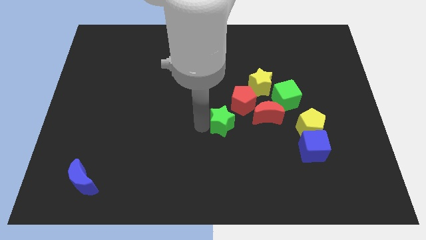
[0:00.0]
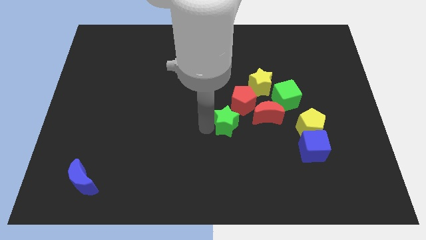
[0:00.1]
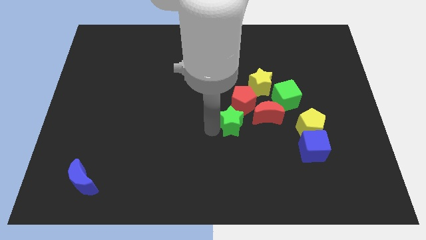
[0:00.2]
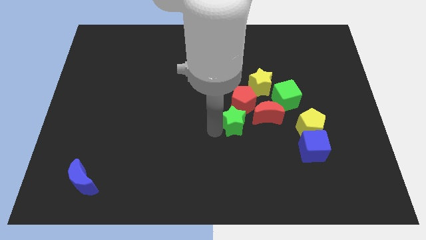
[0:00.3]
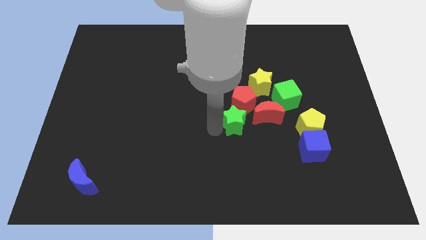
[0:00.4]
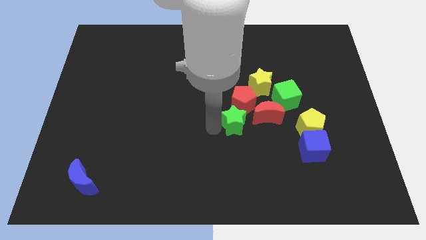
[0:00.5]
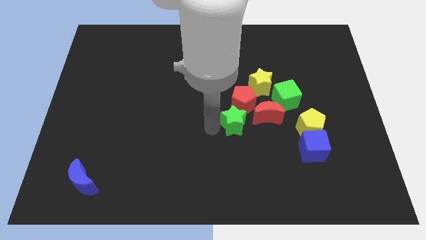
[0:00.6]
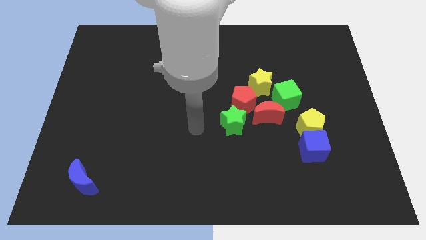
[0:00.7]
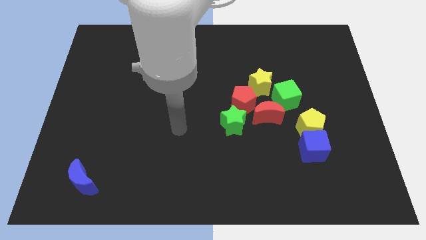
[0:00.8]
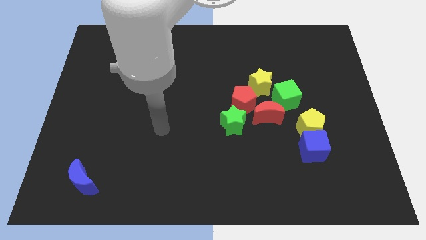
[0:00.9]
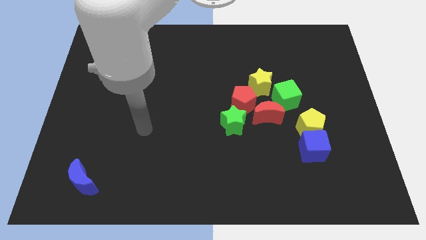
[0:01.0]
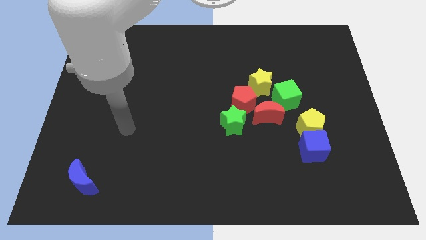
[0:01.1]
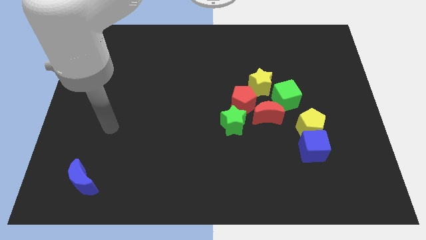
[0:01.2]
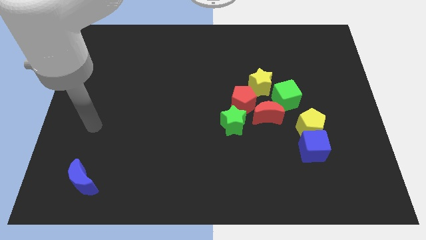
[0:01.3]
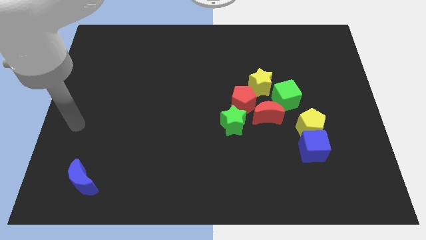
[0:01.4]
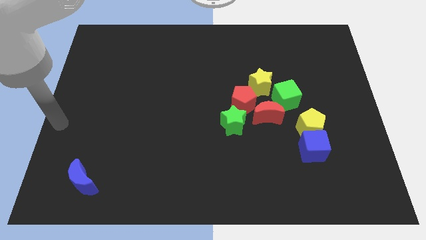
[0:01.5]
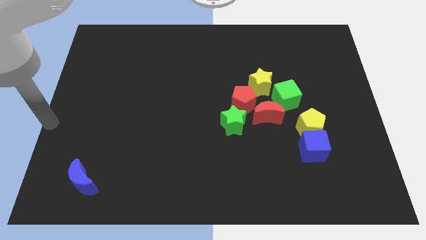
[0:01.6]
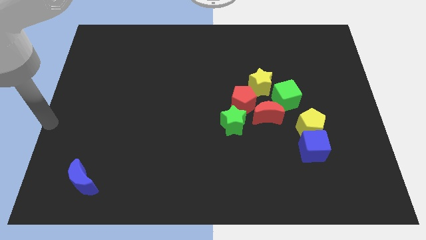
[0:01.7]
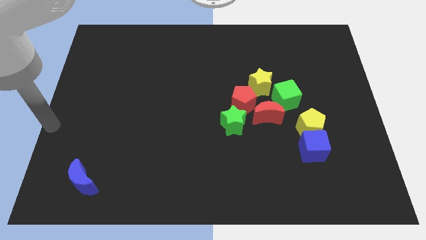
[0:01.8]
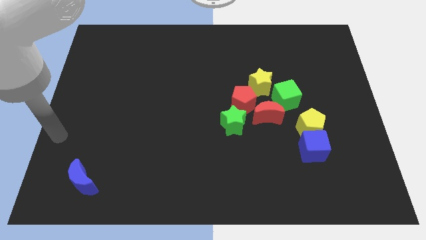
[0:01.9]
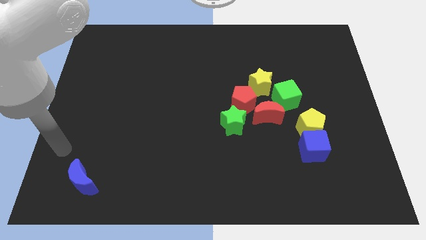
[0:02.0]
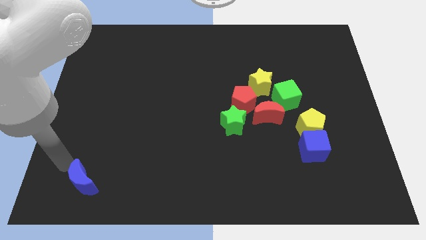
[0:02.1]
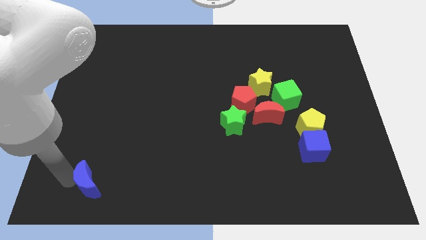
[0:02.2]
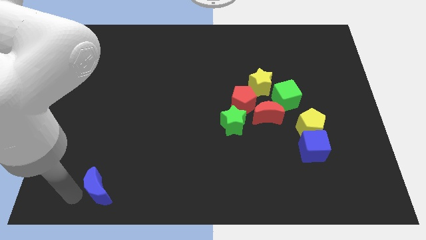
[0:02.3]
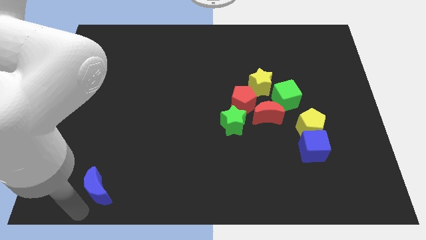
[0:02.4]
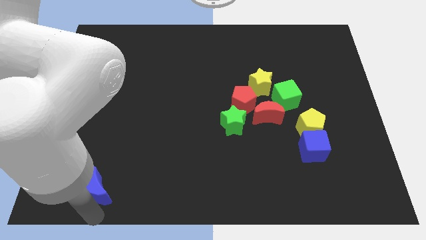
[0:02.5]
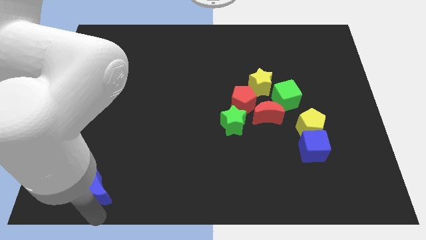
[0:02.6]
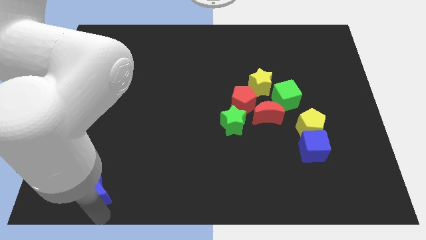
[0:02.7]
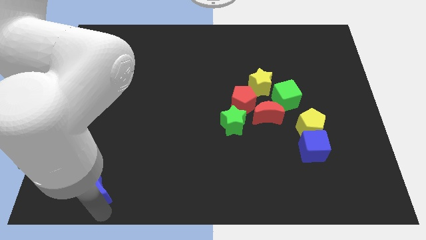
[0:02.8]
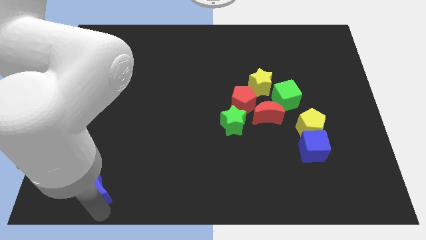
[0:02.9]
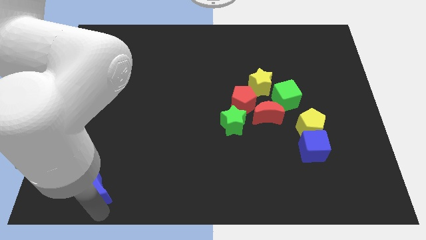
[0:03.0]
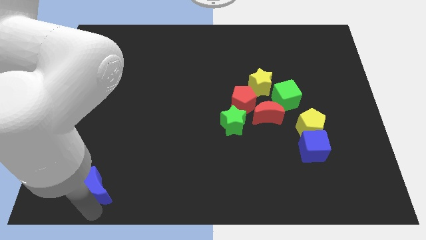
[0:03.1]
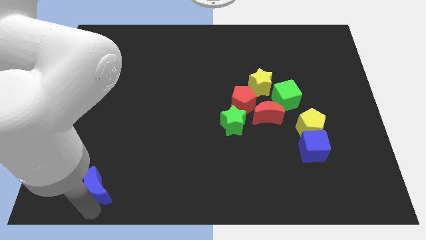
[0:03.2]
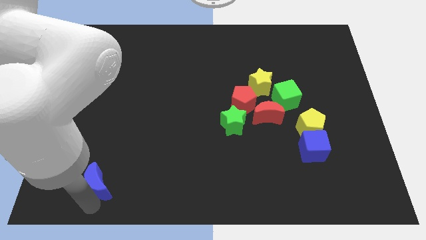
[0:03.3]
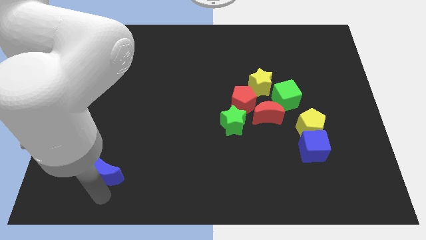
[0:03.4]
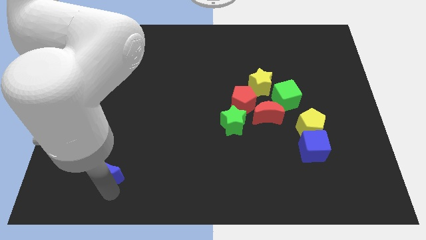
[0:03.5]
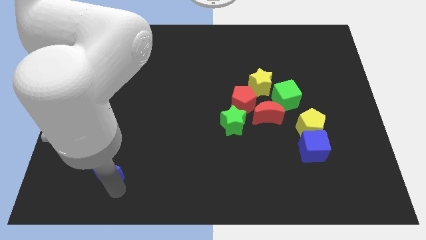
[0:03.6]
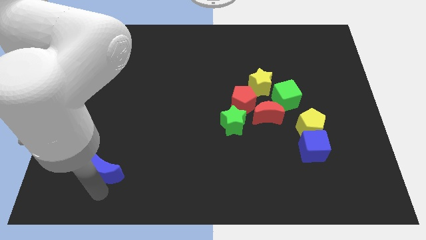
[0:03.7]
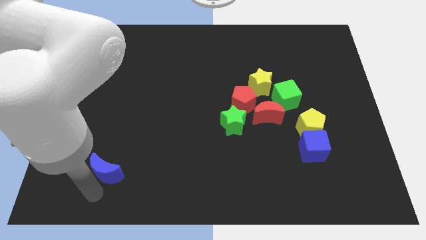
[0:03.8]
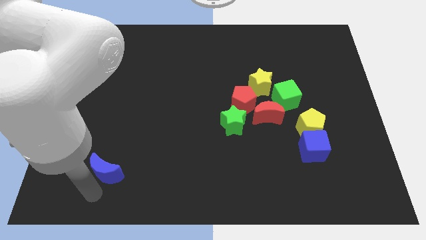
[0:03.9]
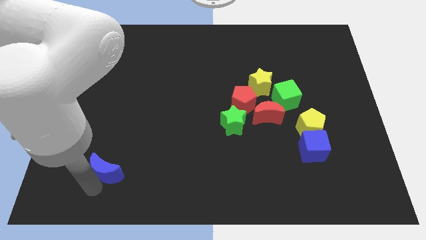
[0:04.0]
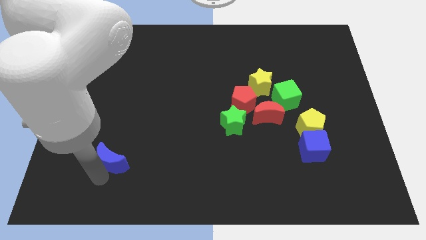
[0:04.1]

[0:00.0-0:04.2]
move the blue moon to the bottom center

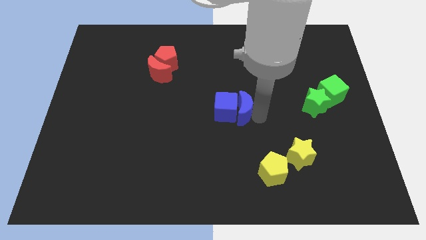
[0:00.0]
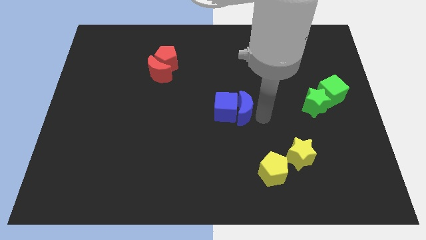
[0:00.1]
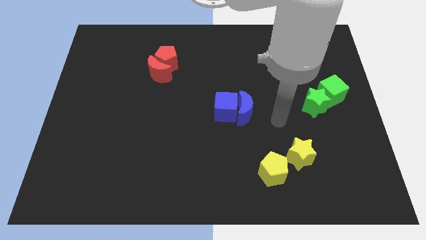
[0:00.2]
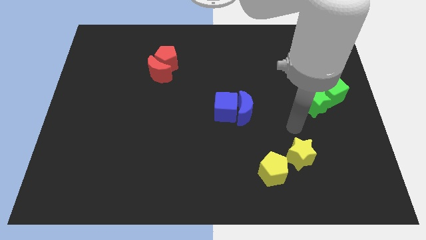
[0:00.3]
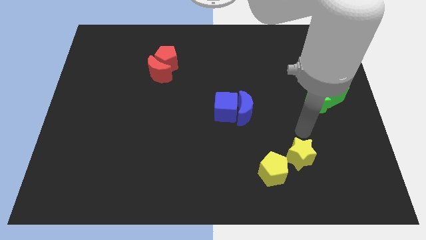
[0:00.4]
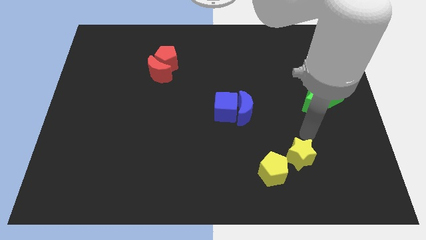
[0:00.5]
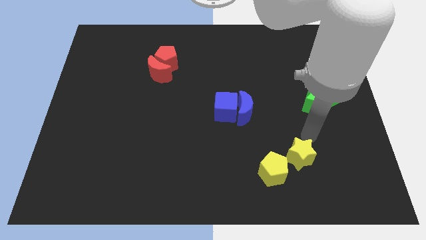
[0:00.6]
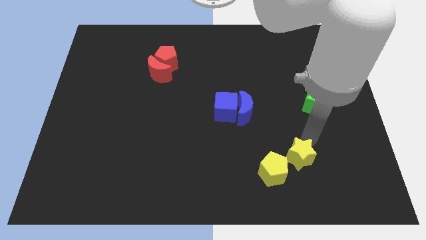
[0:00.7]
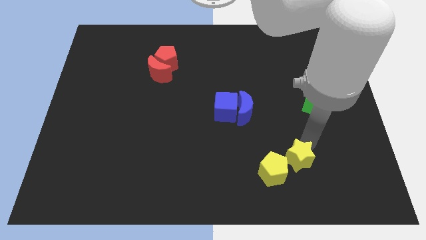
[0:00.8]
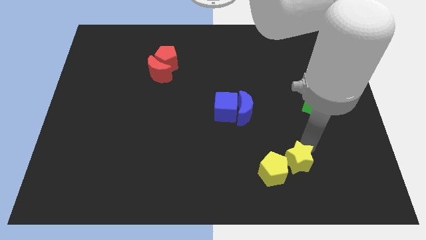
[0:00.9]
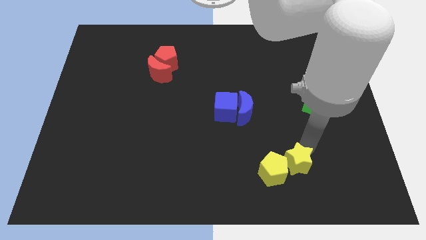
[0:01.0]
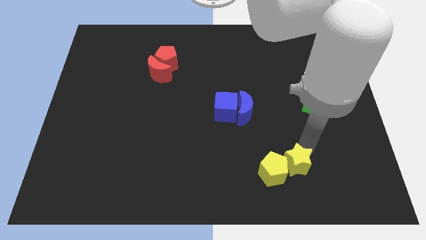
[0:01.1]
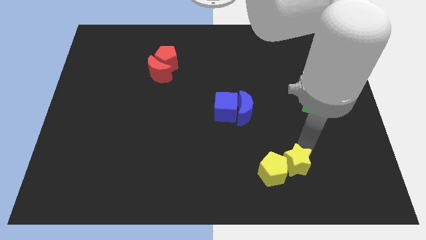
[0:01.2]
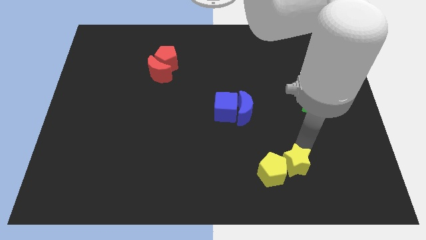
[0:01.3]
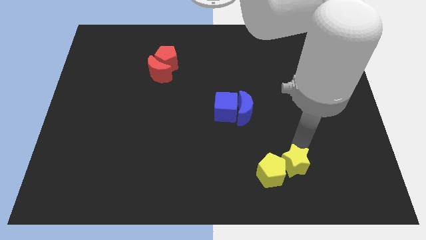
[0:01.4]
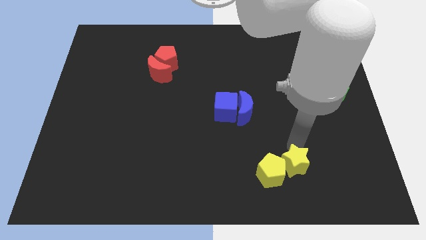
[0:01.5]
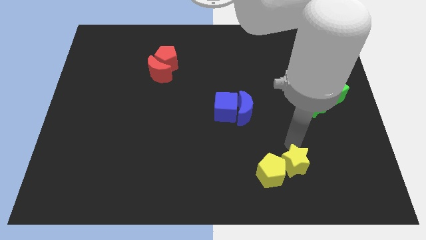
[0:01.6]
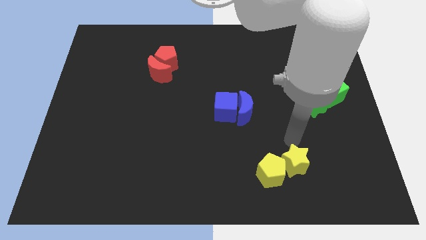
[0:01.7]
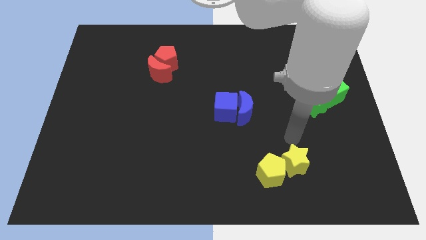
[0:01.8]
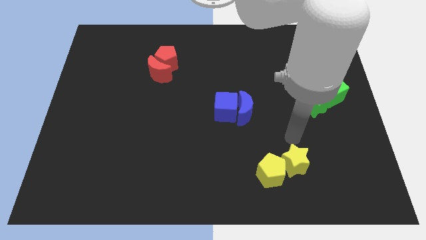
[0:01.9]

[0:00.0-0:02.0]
slide yellow star into the yellow pentagon

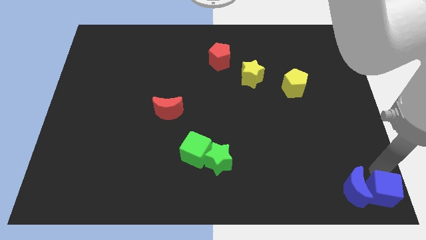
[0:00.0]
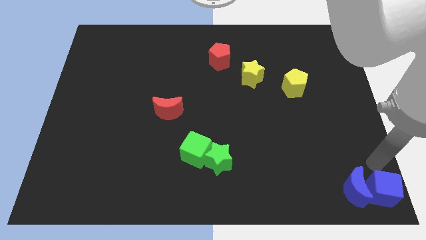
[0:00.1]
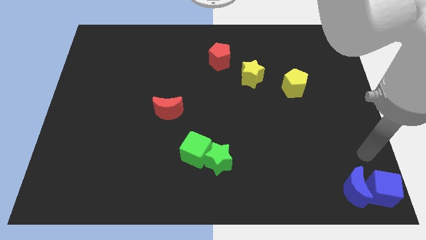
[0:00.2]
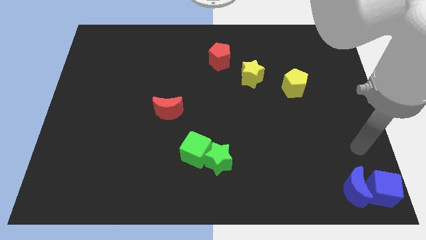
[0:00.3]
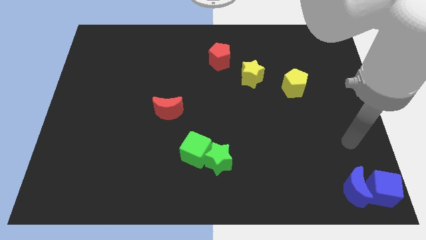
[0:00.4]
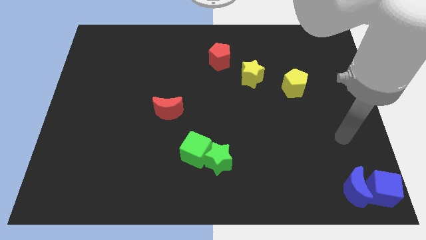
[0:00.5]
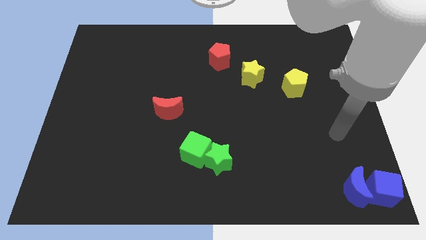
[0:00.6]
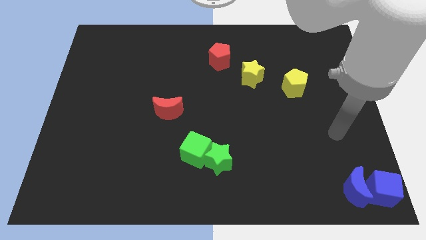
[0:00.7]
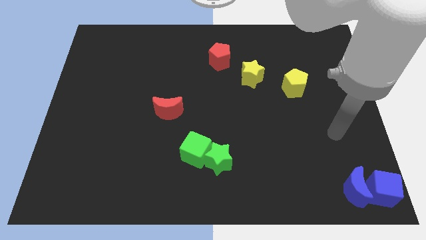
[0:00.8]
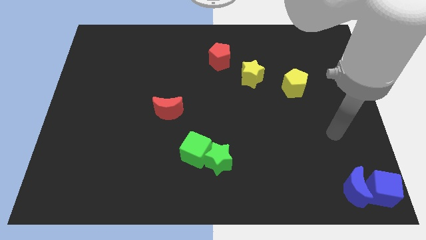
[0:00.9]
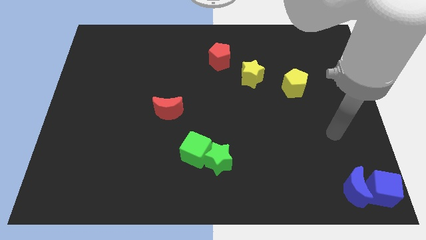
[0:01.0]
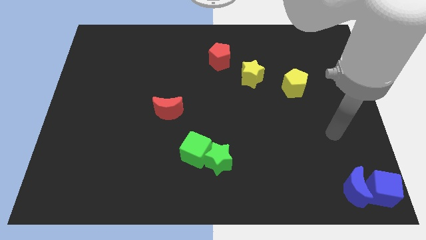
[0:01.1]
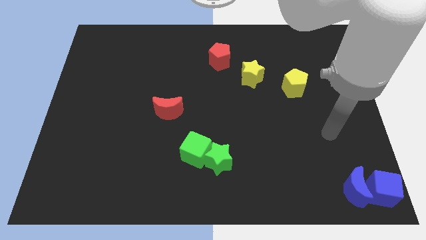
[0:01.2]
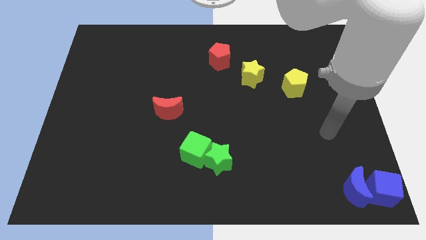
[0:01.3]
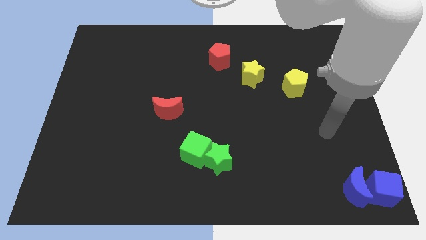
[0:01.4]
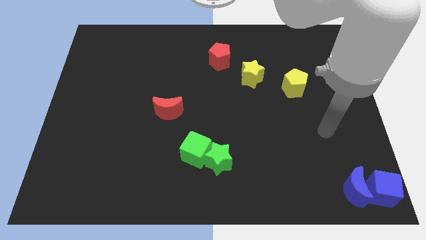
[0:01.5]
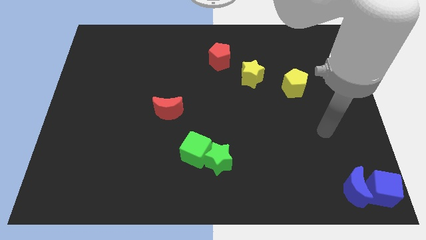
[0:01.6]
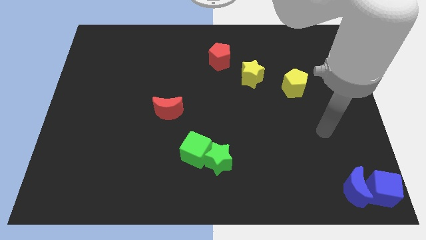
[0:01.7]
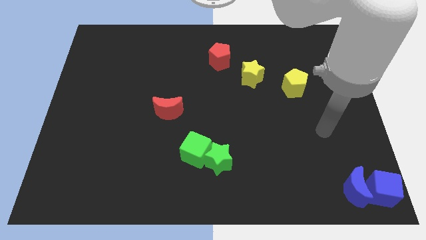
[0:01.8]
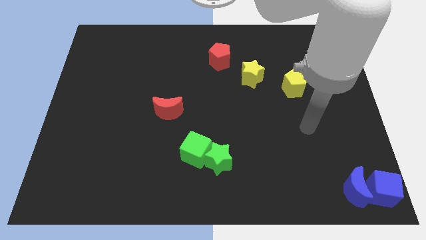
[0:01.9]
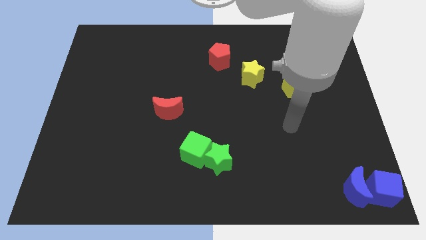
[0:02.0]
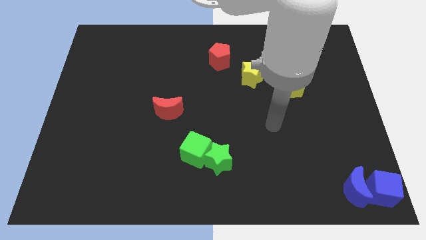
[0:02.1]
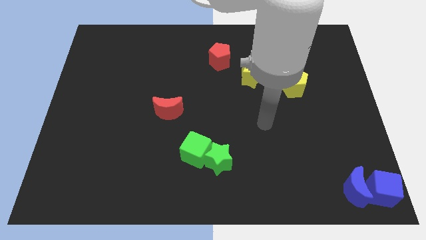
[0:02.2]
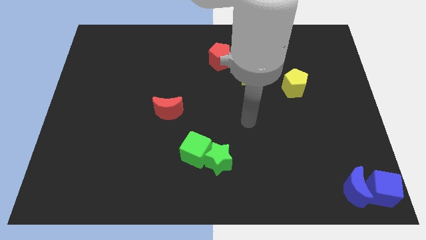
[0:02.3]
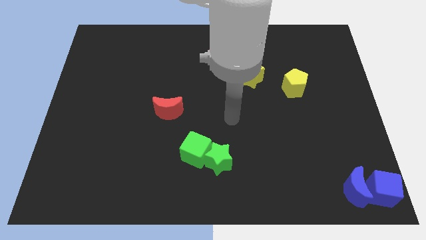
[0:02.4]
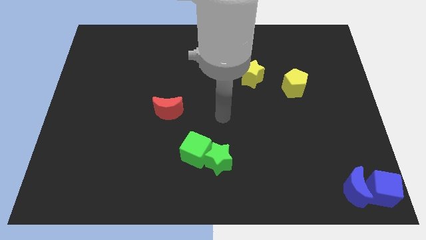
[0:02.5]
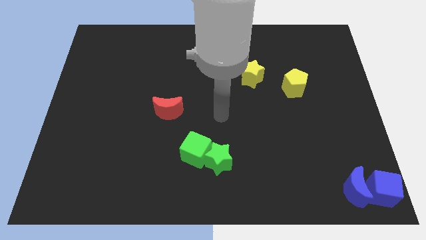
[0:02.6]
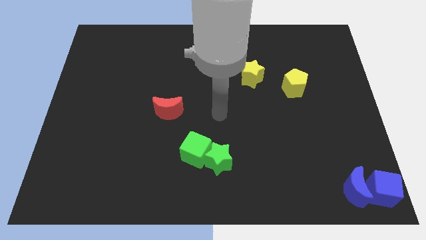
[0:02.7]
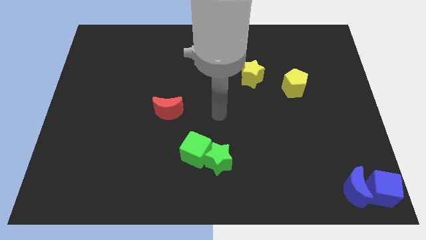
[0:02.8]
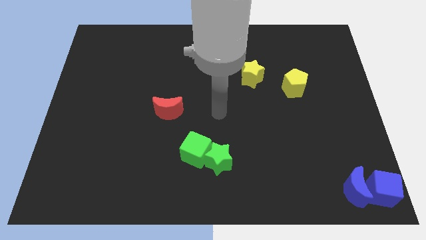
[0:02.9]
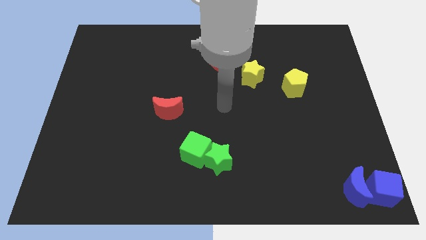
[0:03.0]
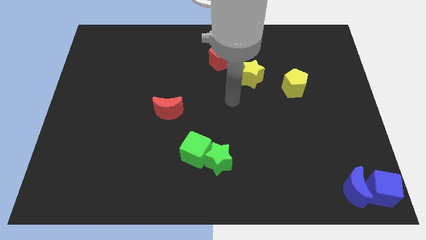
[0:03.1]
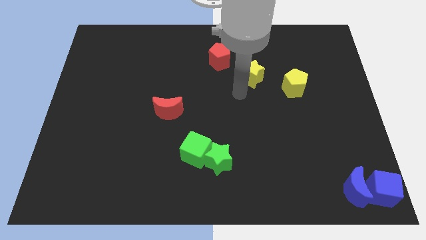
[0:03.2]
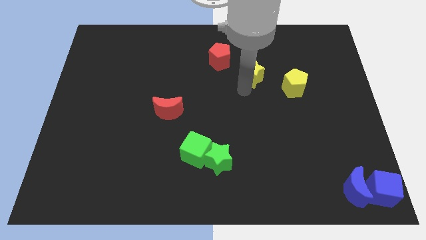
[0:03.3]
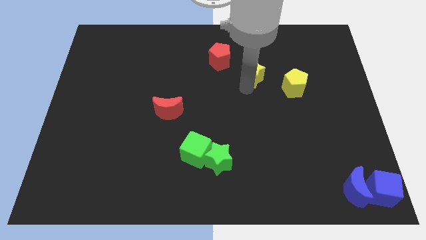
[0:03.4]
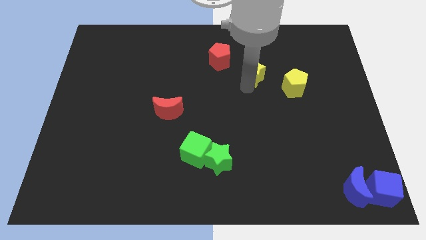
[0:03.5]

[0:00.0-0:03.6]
place your arm to the bottom of yellow star
